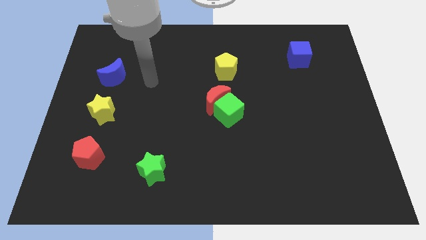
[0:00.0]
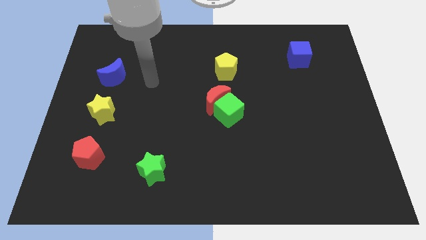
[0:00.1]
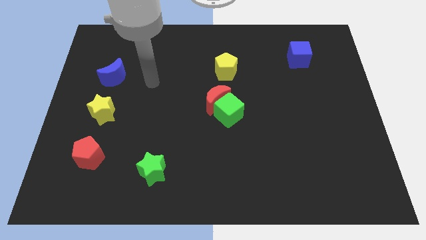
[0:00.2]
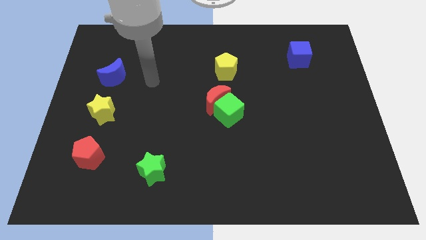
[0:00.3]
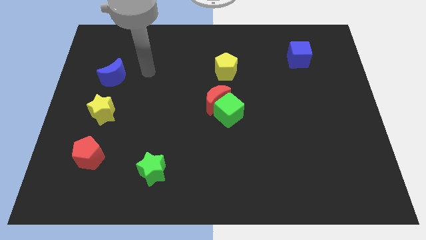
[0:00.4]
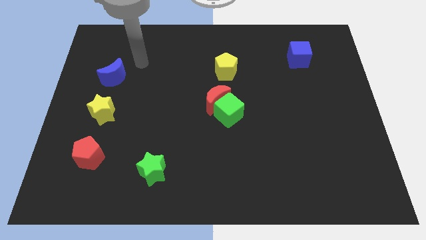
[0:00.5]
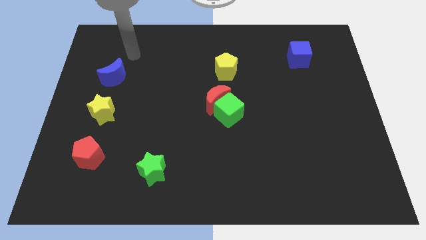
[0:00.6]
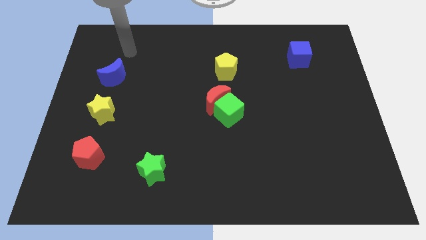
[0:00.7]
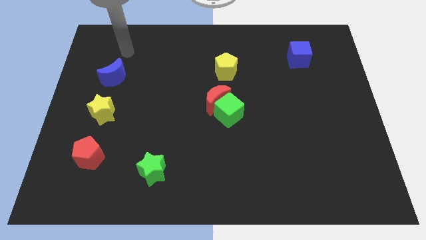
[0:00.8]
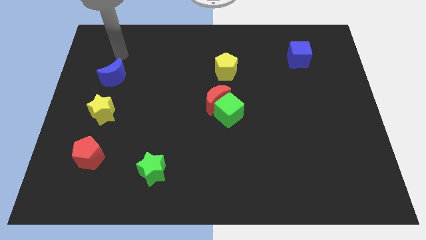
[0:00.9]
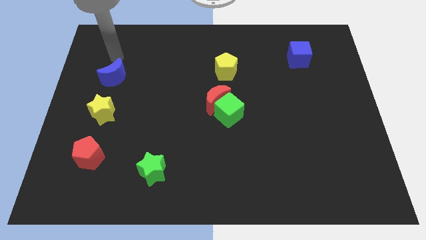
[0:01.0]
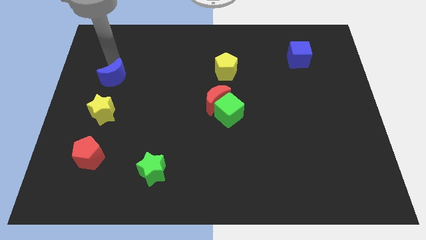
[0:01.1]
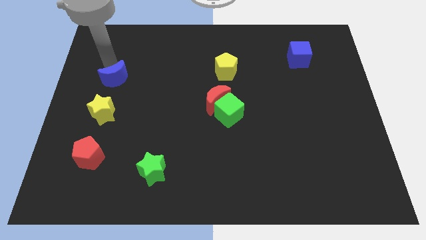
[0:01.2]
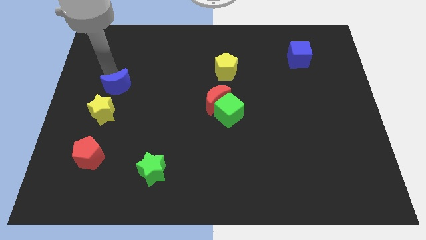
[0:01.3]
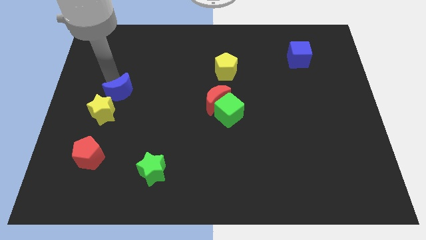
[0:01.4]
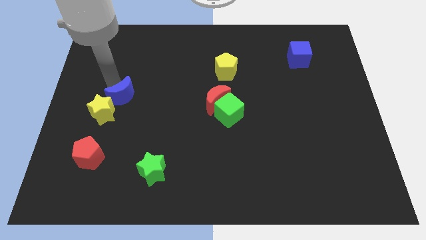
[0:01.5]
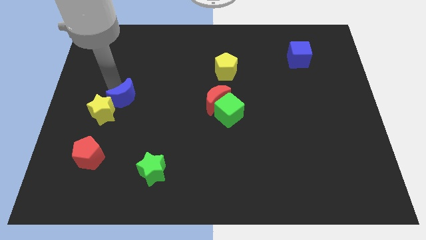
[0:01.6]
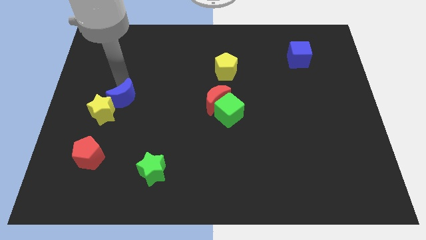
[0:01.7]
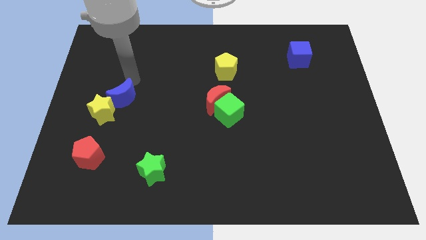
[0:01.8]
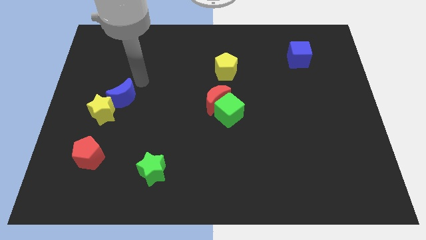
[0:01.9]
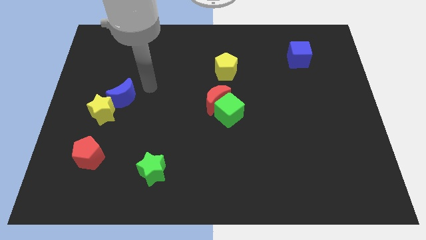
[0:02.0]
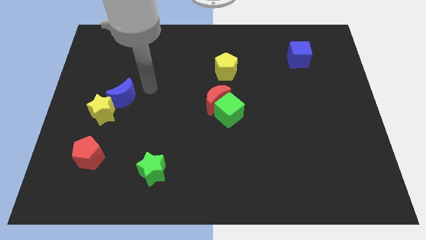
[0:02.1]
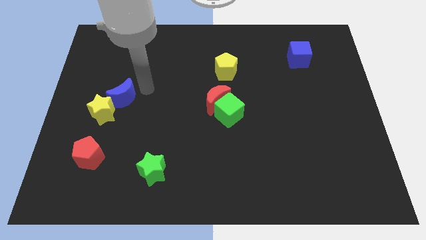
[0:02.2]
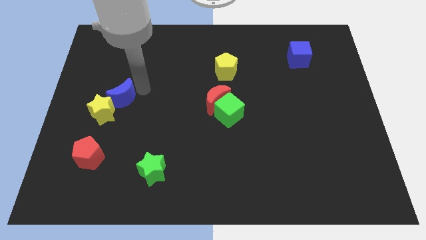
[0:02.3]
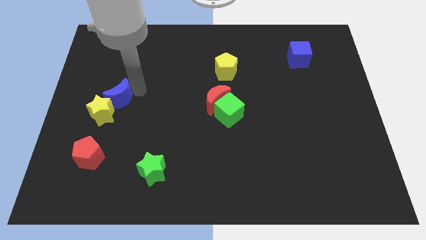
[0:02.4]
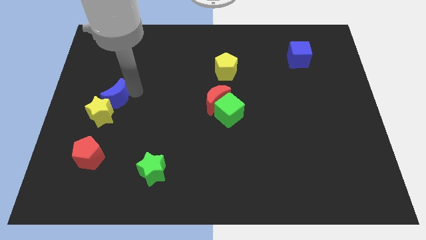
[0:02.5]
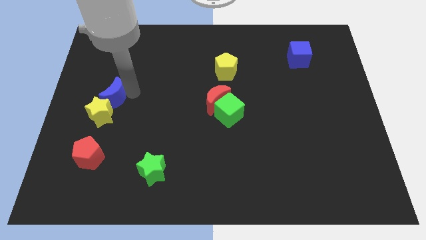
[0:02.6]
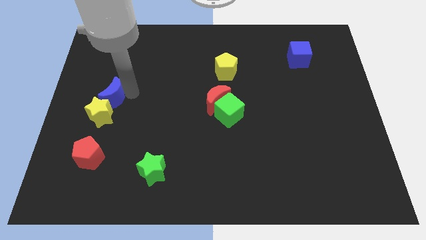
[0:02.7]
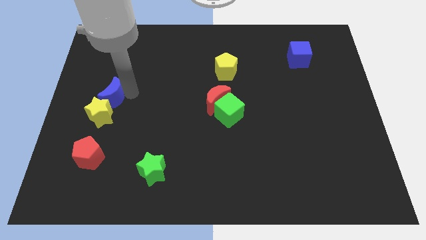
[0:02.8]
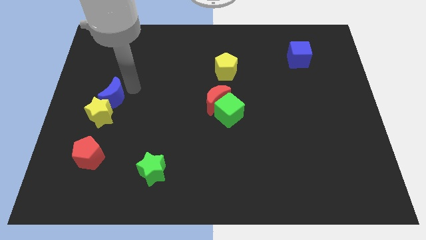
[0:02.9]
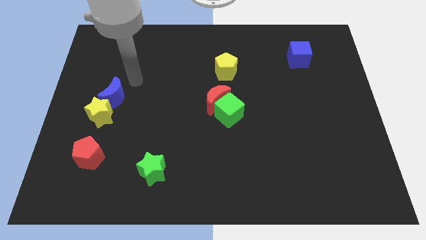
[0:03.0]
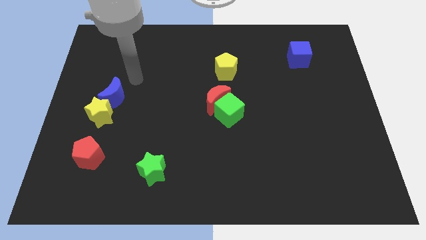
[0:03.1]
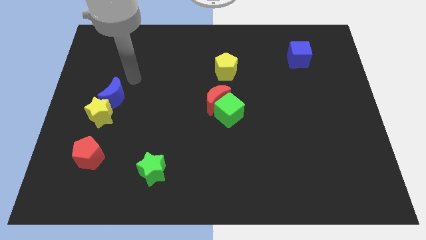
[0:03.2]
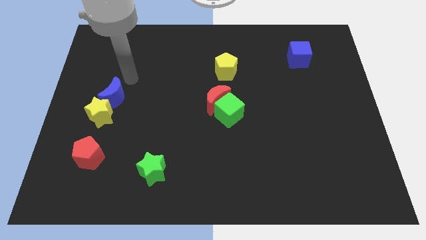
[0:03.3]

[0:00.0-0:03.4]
push the blue moon towards the left center of the board

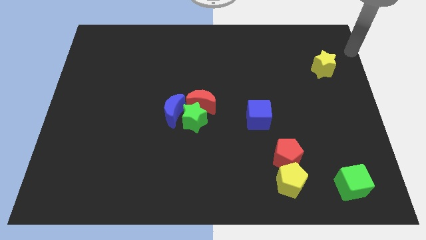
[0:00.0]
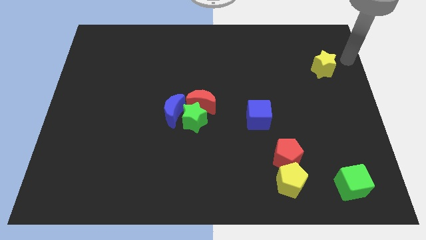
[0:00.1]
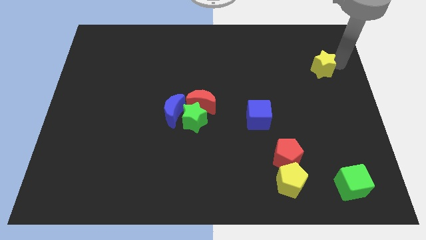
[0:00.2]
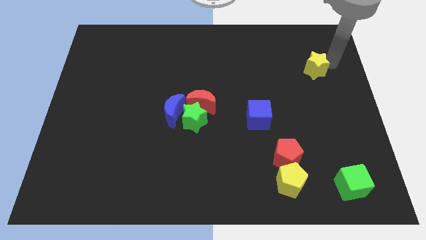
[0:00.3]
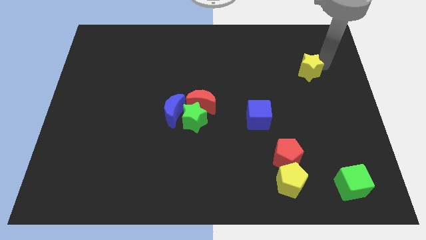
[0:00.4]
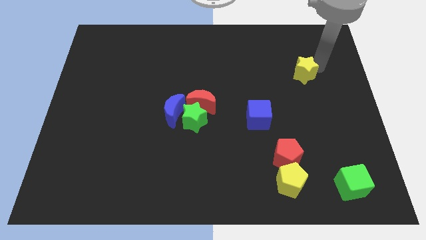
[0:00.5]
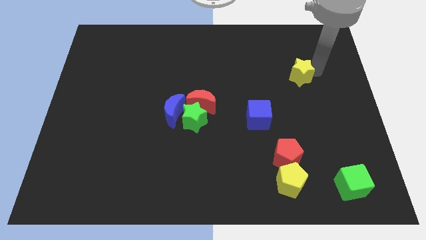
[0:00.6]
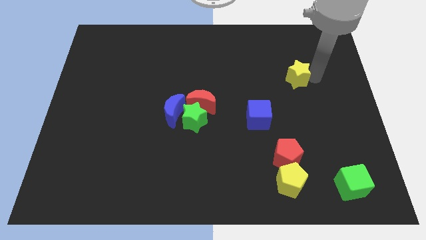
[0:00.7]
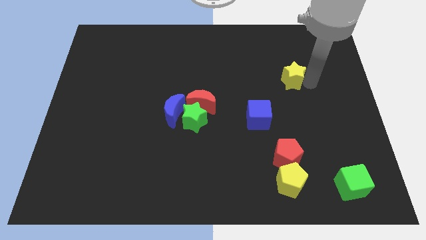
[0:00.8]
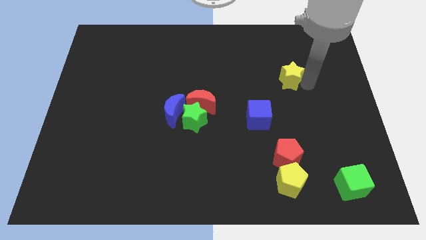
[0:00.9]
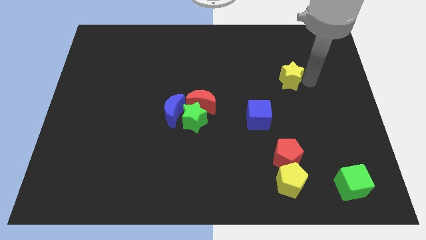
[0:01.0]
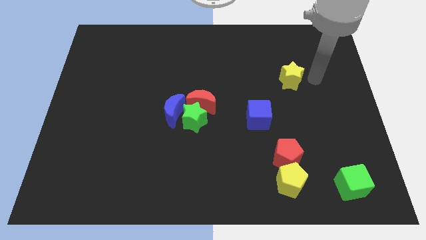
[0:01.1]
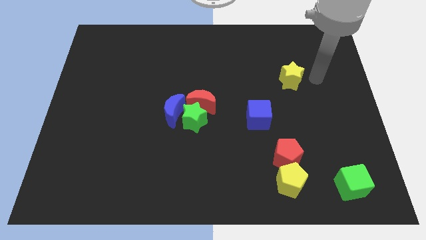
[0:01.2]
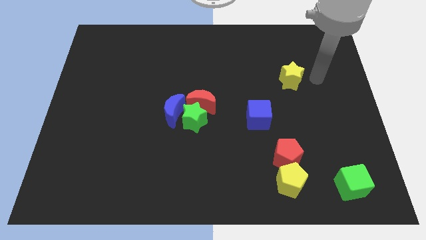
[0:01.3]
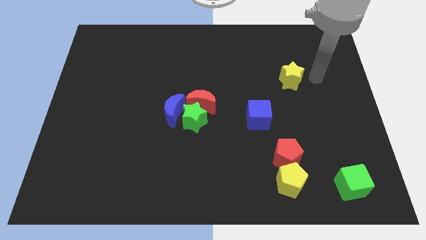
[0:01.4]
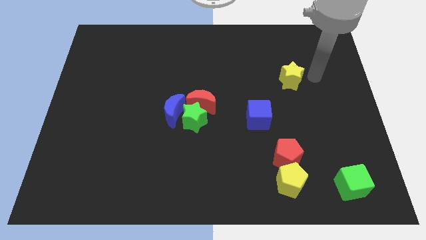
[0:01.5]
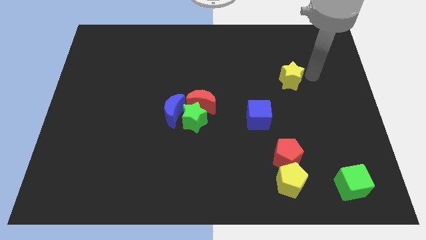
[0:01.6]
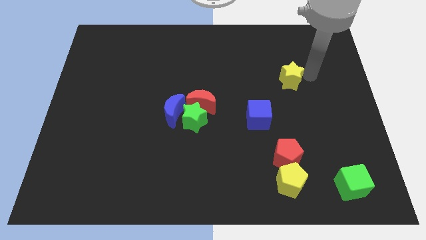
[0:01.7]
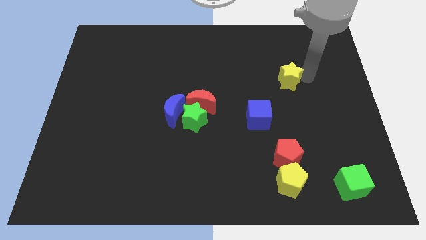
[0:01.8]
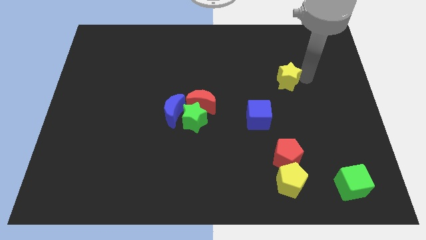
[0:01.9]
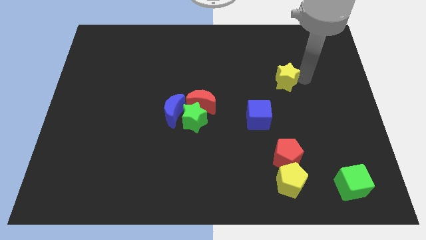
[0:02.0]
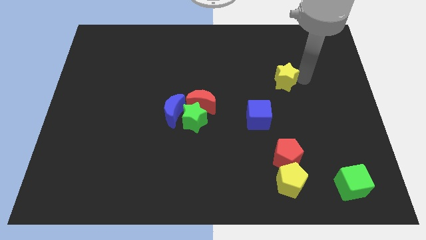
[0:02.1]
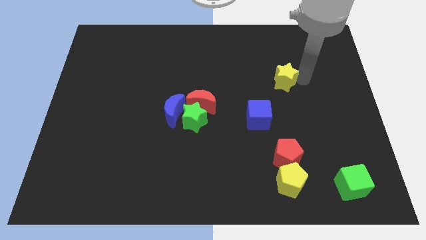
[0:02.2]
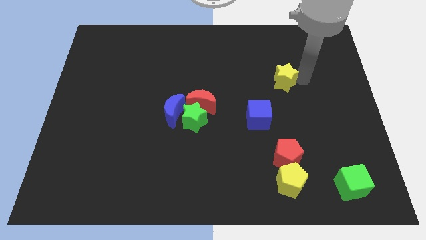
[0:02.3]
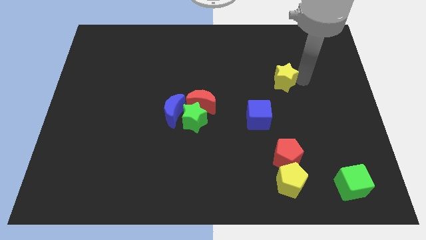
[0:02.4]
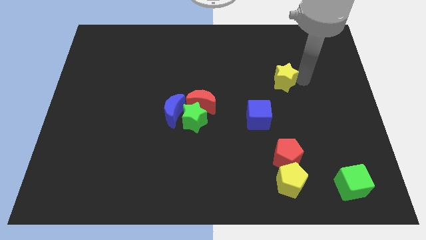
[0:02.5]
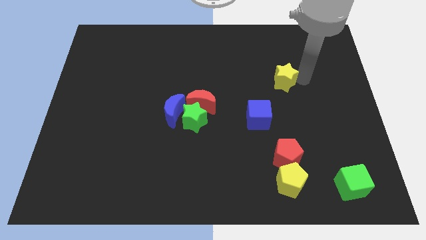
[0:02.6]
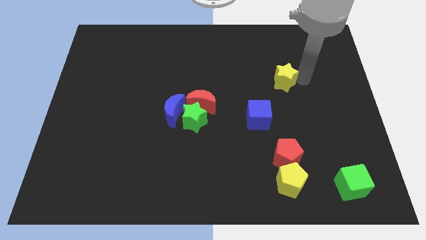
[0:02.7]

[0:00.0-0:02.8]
push the yellow star towards blue cube diagonal right

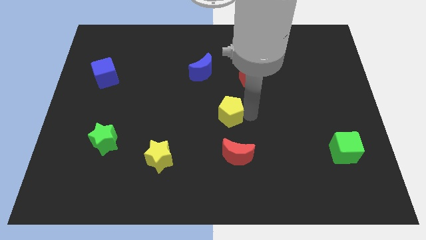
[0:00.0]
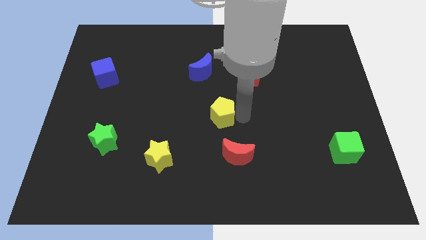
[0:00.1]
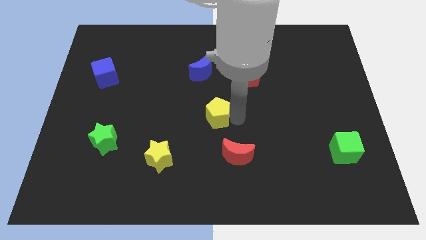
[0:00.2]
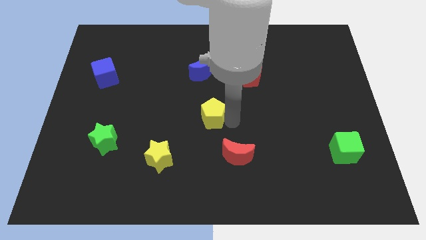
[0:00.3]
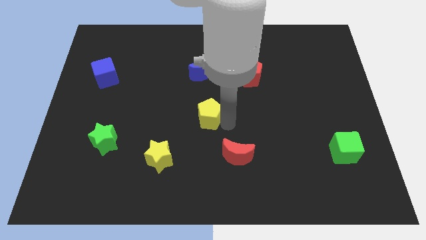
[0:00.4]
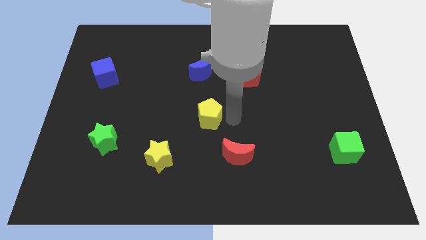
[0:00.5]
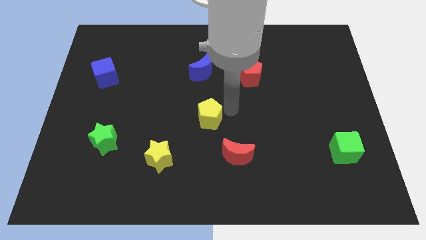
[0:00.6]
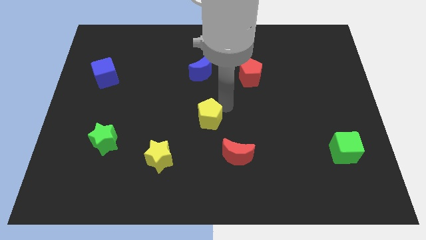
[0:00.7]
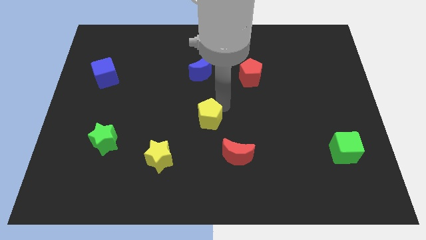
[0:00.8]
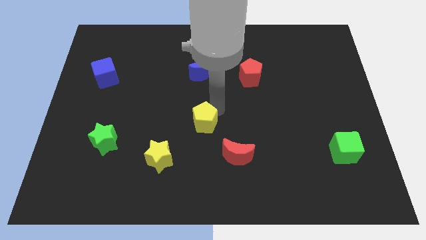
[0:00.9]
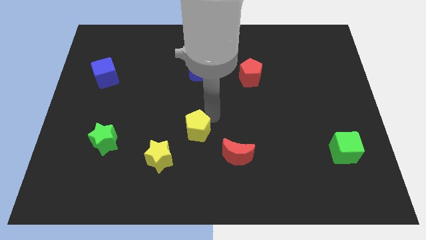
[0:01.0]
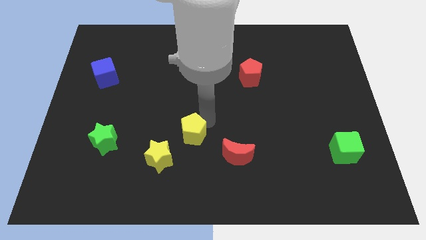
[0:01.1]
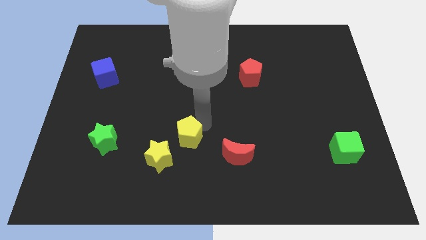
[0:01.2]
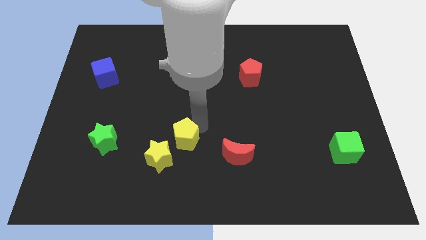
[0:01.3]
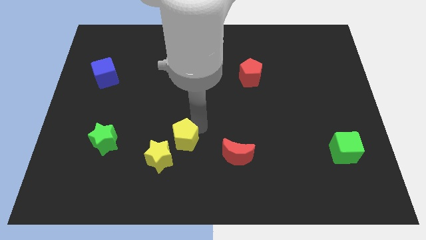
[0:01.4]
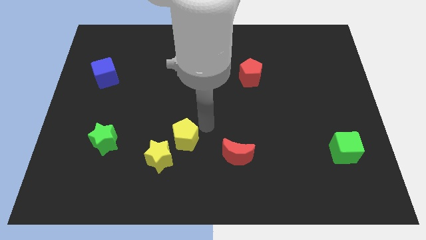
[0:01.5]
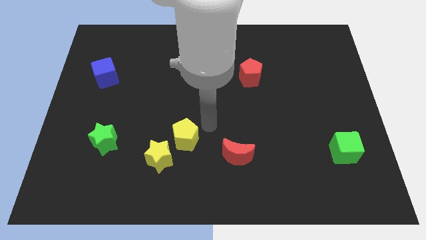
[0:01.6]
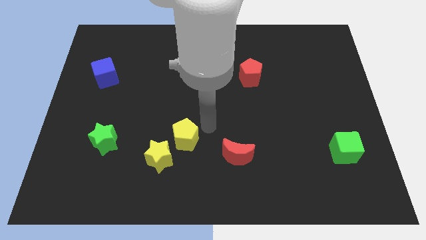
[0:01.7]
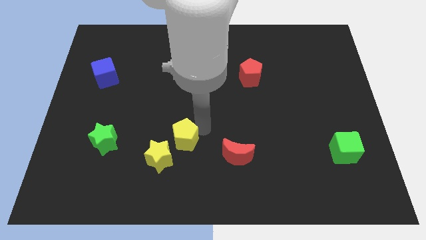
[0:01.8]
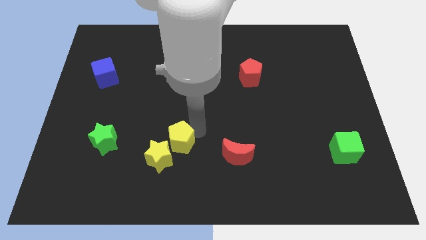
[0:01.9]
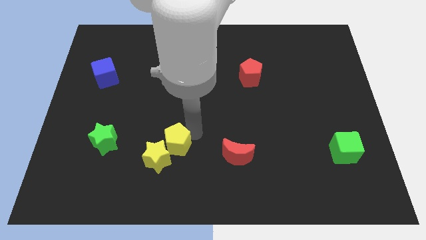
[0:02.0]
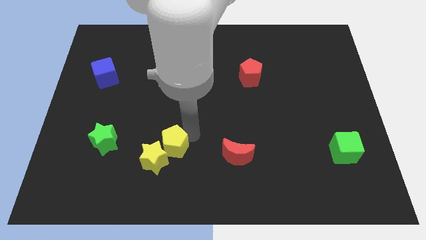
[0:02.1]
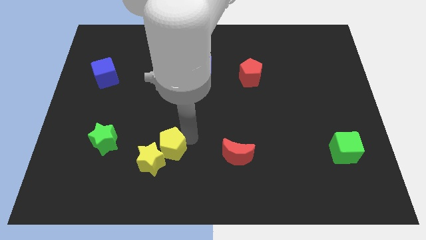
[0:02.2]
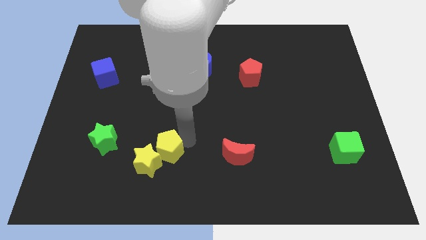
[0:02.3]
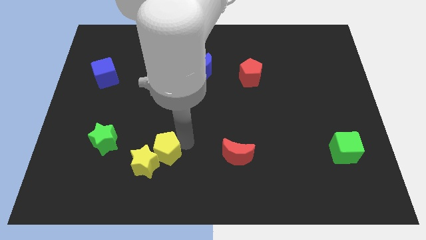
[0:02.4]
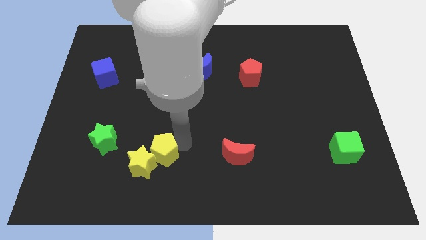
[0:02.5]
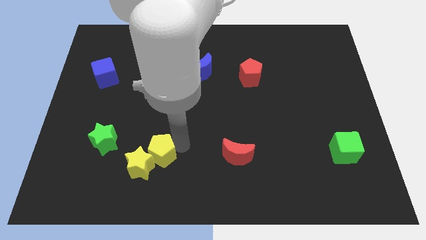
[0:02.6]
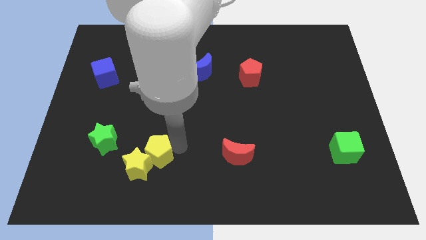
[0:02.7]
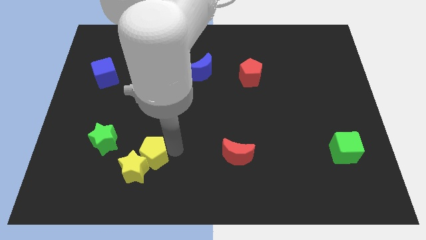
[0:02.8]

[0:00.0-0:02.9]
push the yellow pentagon into yellow star
